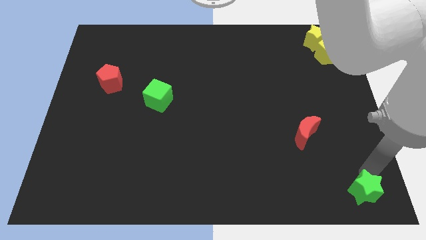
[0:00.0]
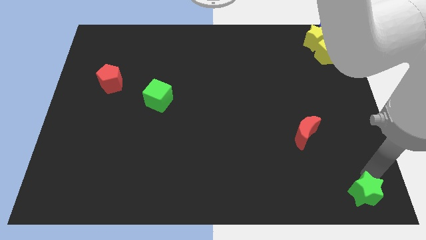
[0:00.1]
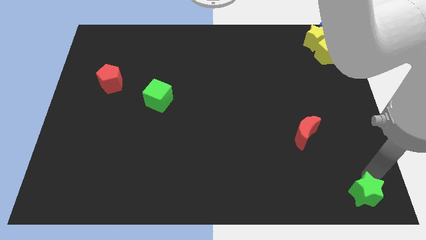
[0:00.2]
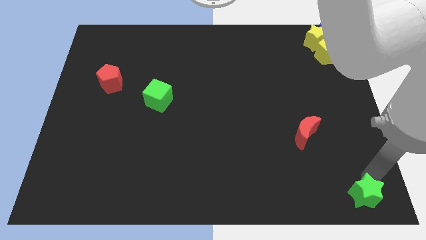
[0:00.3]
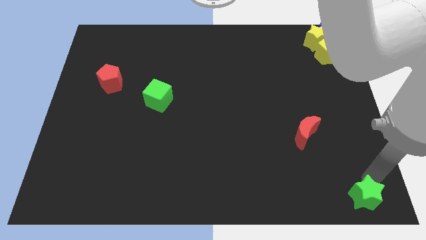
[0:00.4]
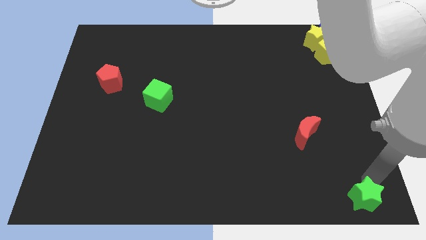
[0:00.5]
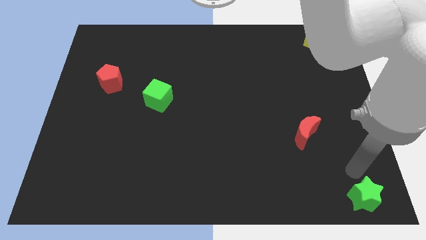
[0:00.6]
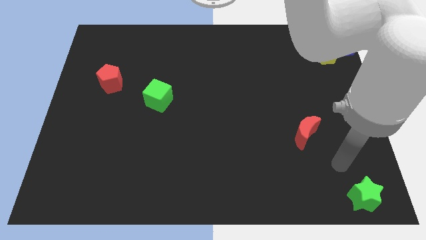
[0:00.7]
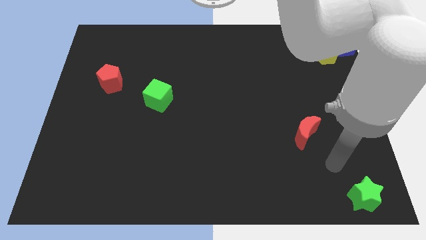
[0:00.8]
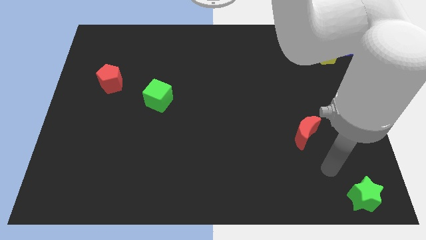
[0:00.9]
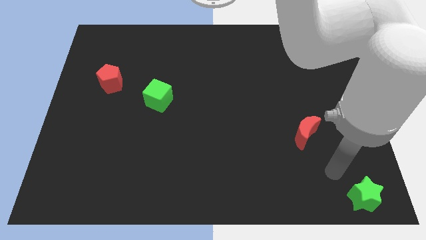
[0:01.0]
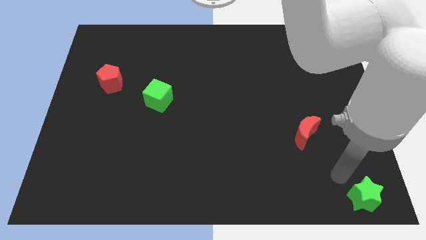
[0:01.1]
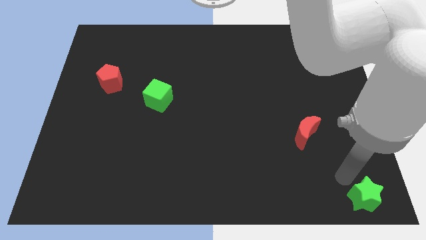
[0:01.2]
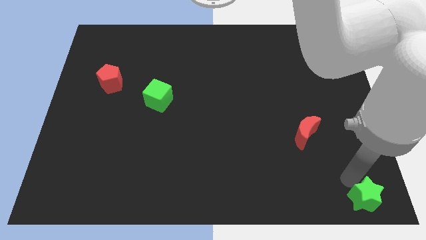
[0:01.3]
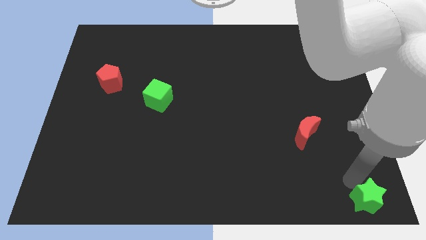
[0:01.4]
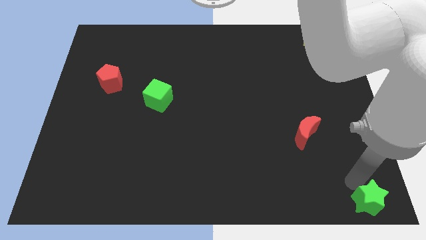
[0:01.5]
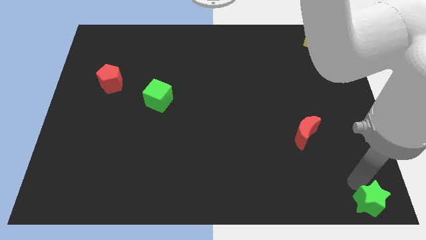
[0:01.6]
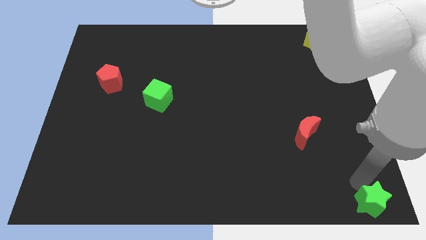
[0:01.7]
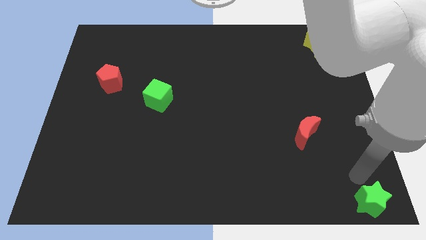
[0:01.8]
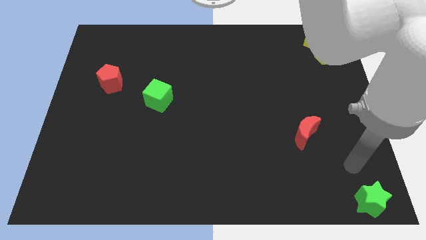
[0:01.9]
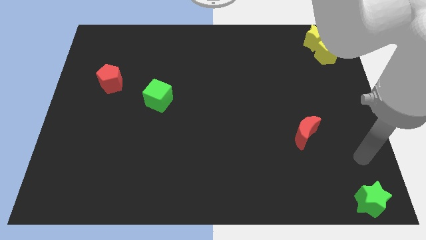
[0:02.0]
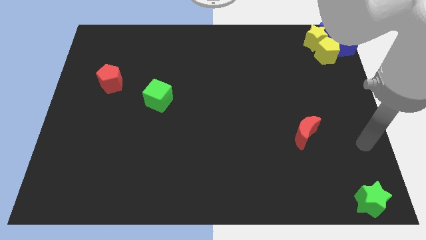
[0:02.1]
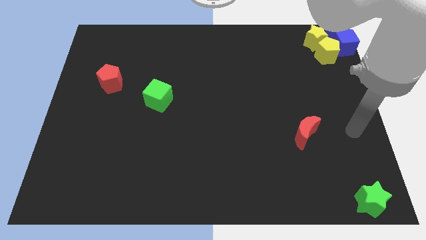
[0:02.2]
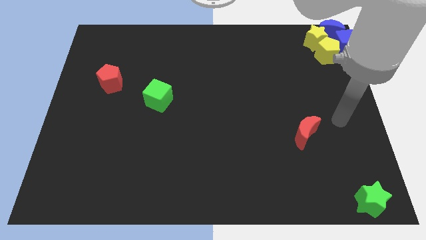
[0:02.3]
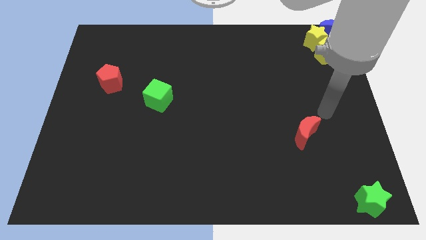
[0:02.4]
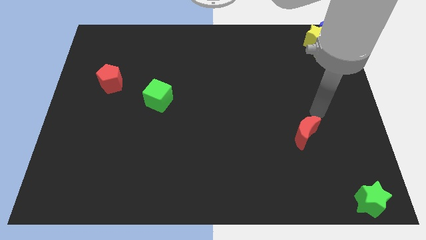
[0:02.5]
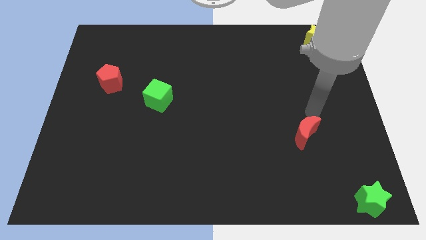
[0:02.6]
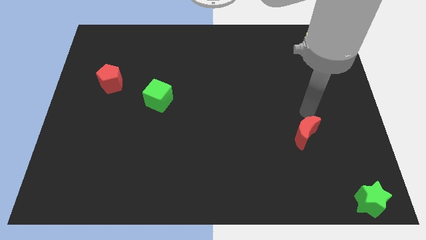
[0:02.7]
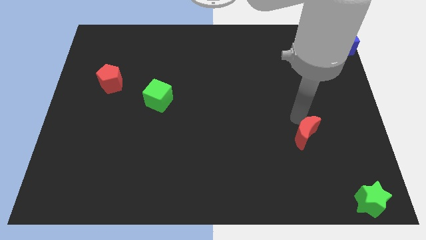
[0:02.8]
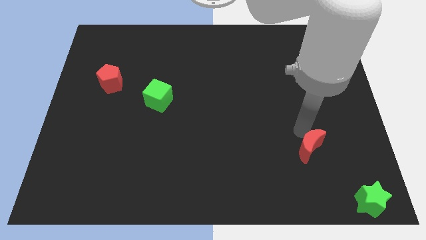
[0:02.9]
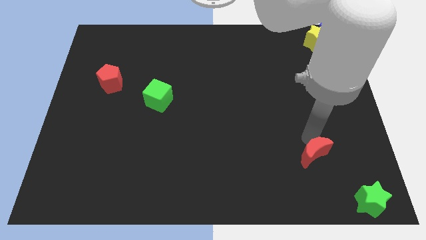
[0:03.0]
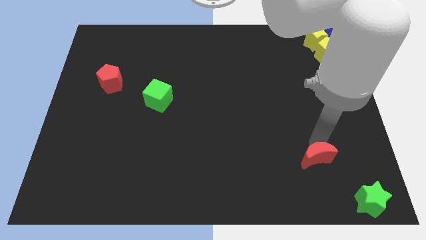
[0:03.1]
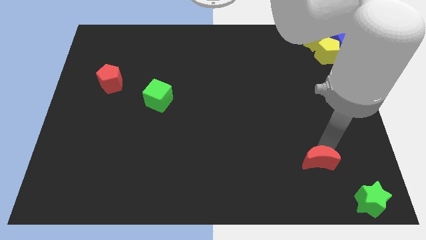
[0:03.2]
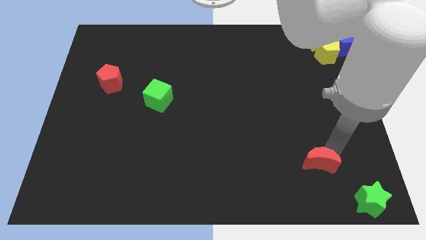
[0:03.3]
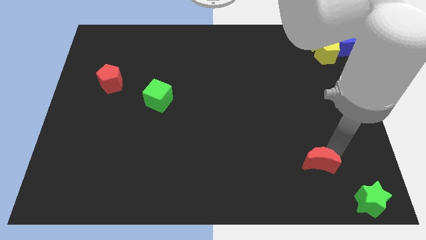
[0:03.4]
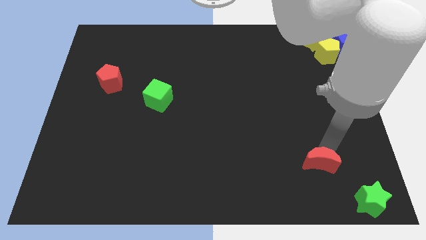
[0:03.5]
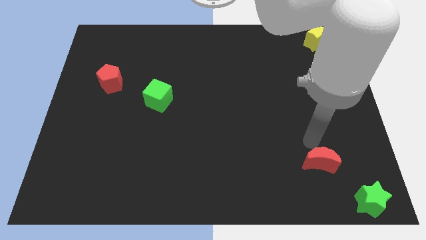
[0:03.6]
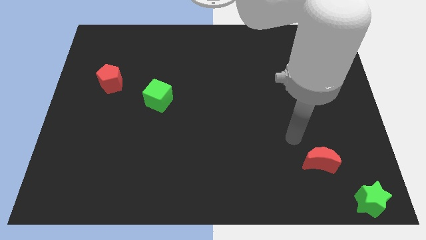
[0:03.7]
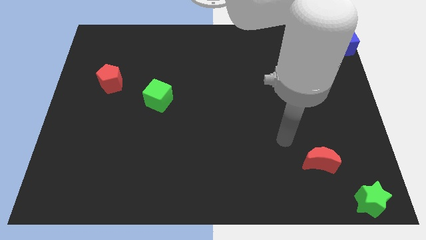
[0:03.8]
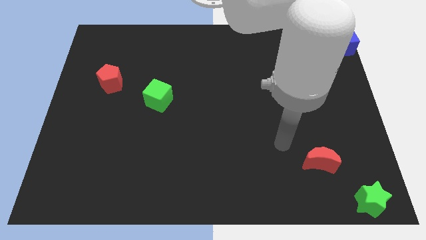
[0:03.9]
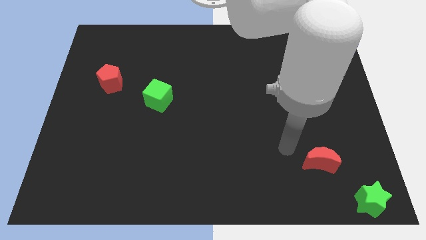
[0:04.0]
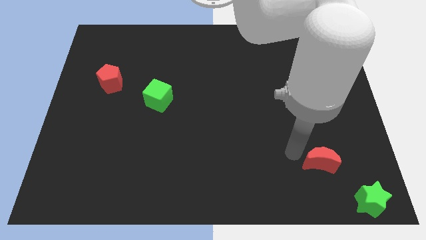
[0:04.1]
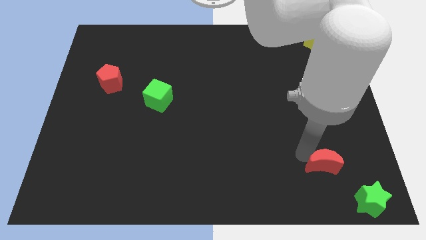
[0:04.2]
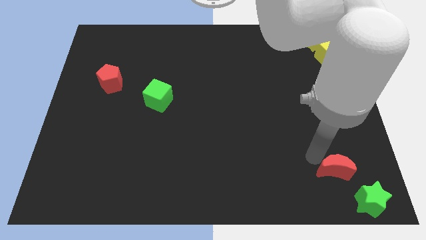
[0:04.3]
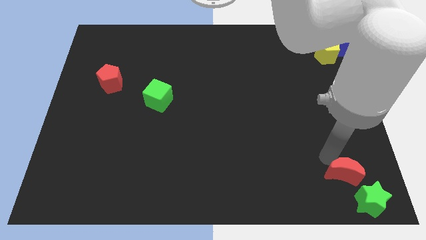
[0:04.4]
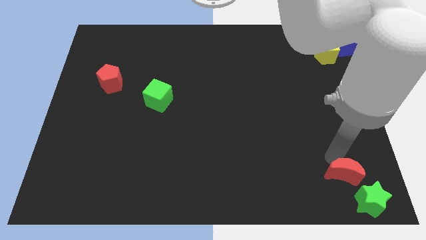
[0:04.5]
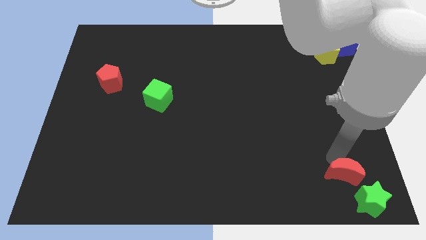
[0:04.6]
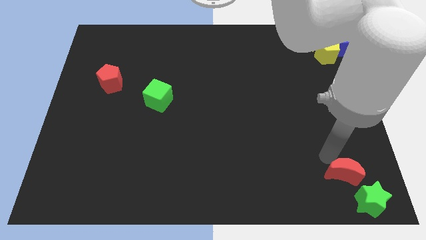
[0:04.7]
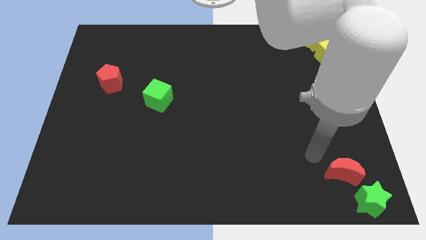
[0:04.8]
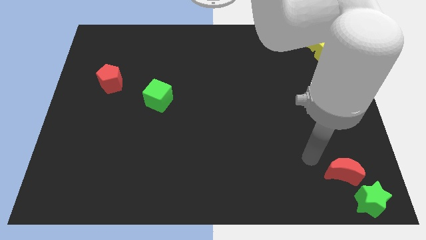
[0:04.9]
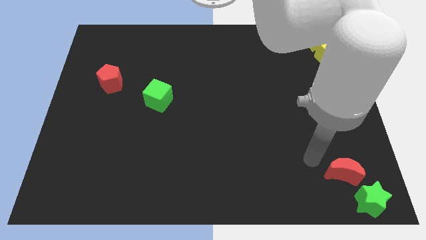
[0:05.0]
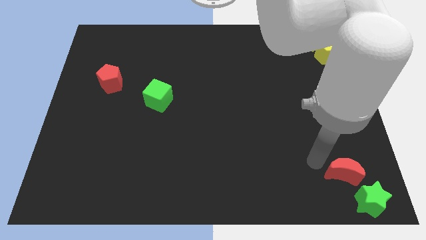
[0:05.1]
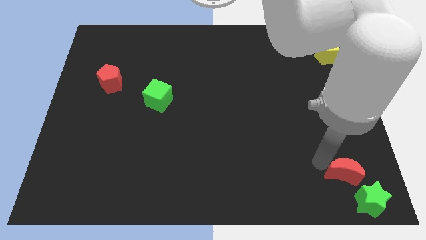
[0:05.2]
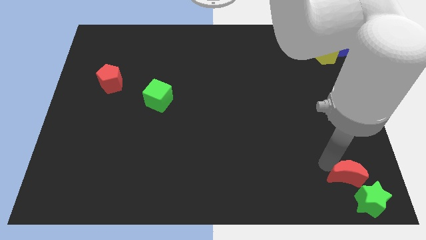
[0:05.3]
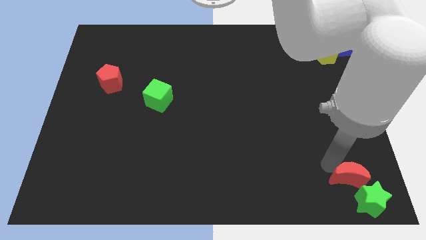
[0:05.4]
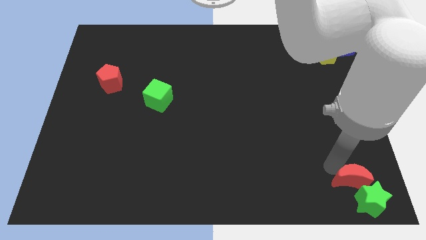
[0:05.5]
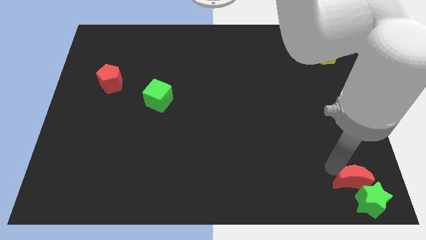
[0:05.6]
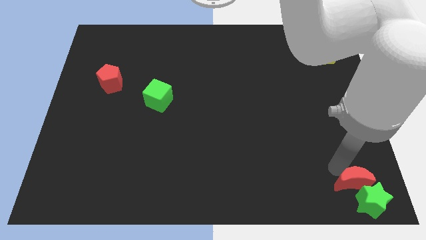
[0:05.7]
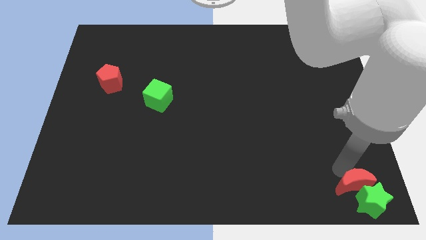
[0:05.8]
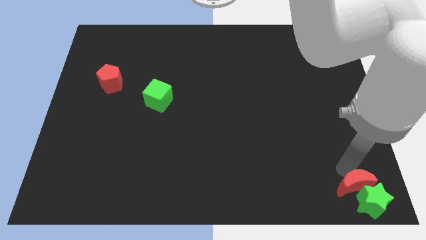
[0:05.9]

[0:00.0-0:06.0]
push the red moon into the green star

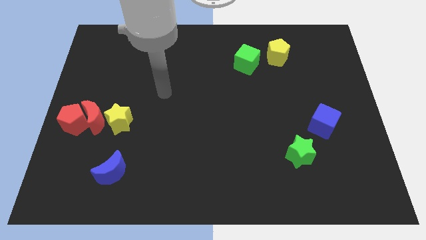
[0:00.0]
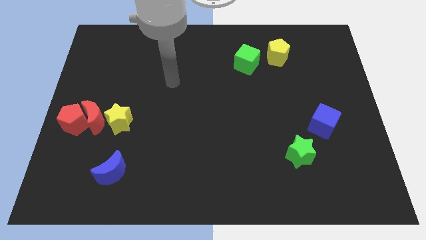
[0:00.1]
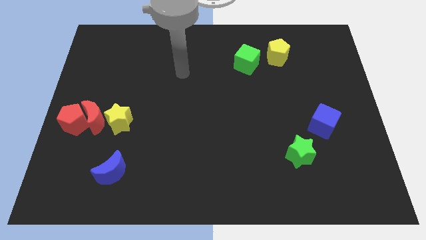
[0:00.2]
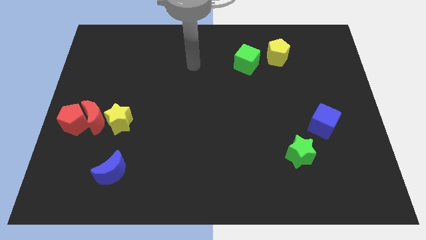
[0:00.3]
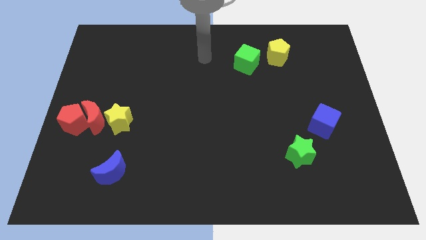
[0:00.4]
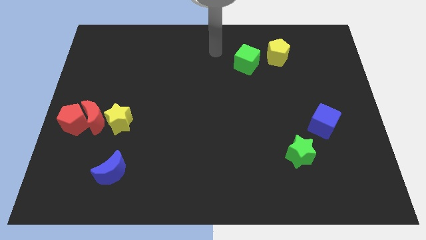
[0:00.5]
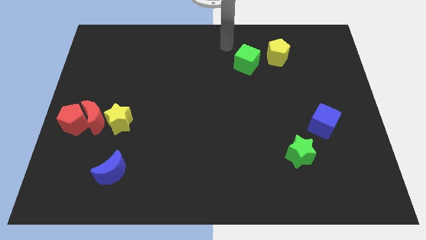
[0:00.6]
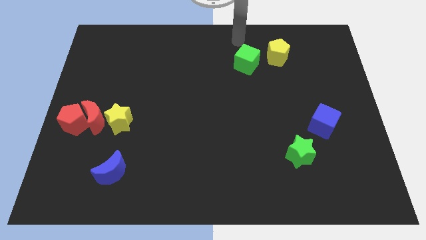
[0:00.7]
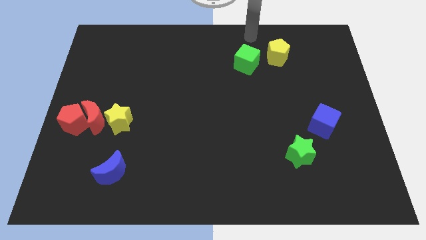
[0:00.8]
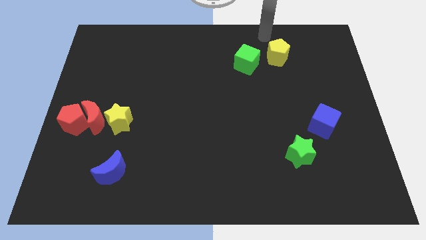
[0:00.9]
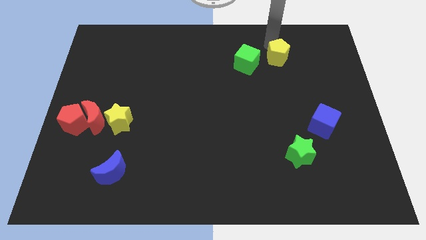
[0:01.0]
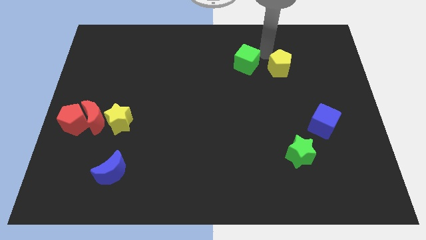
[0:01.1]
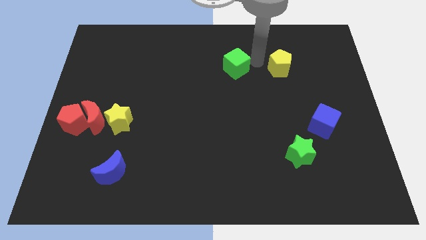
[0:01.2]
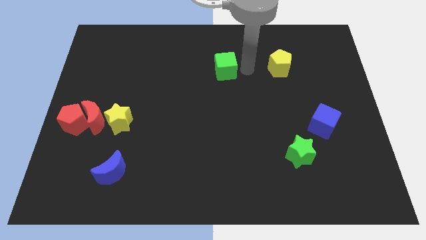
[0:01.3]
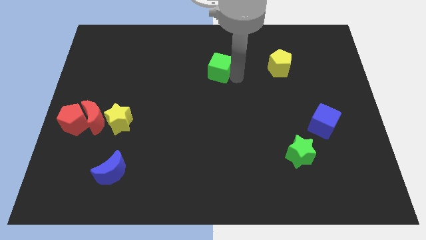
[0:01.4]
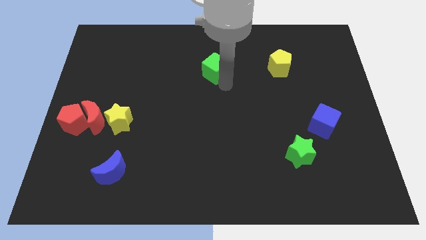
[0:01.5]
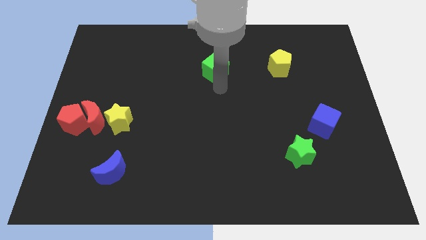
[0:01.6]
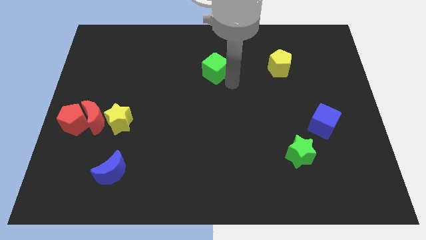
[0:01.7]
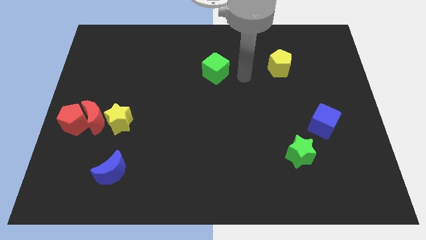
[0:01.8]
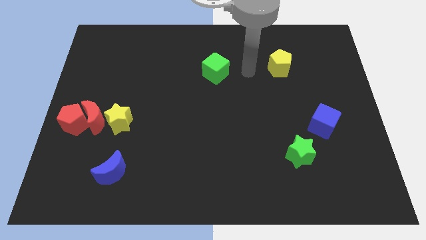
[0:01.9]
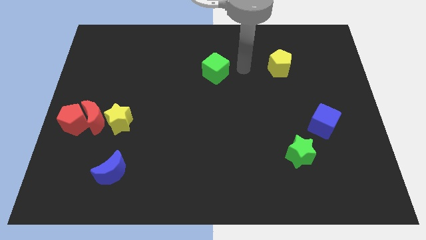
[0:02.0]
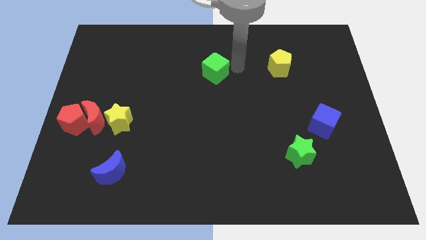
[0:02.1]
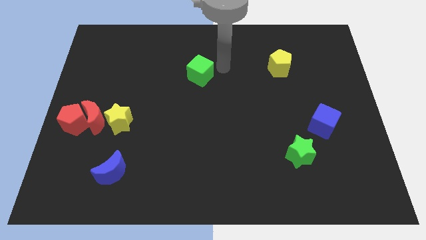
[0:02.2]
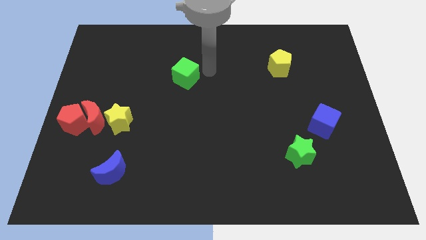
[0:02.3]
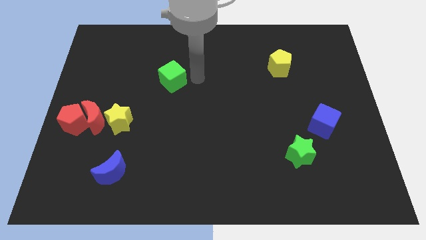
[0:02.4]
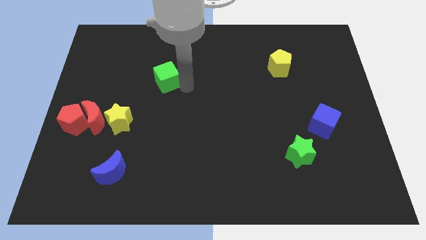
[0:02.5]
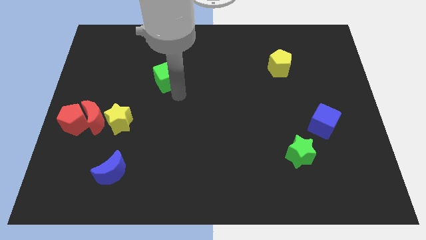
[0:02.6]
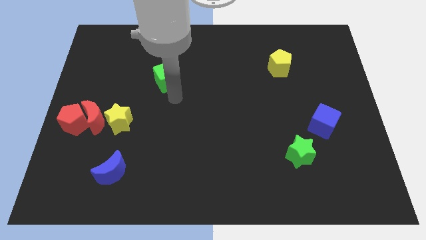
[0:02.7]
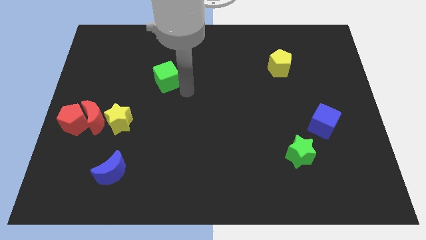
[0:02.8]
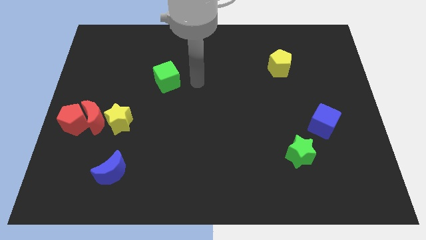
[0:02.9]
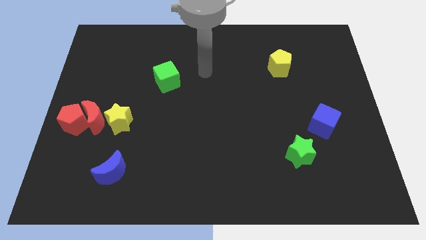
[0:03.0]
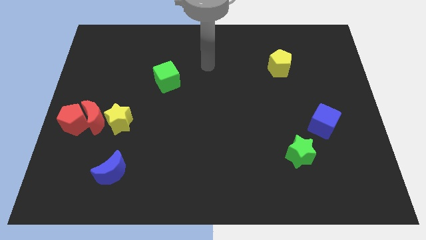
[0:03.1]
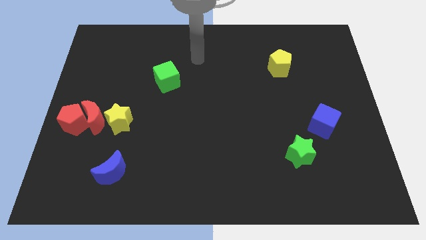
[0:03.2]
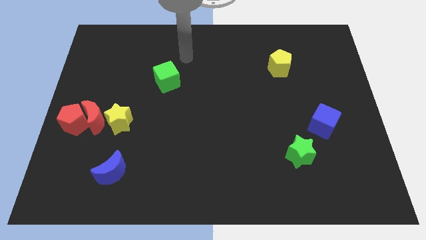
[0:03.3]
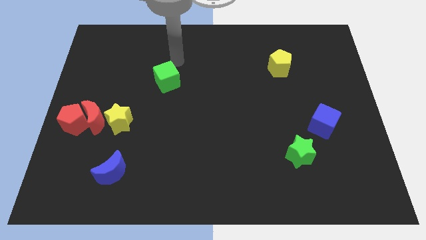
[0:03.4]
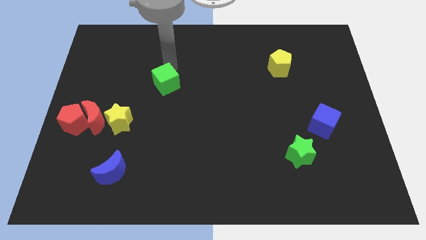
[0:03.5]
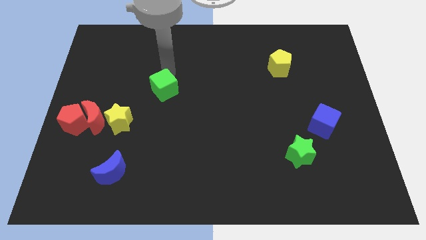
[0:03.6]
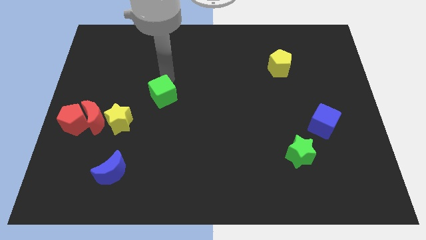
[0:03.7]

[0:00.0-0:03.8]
drag the green cube towards the top right to the yellow star
